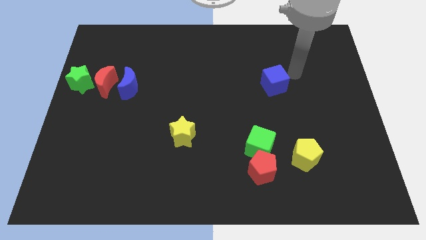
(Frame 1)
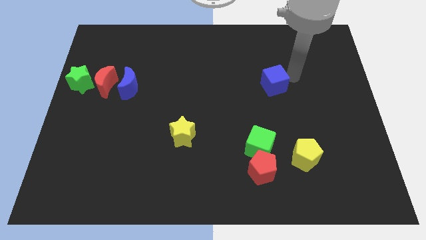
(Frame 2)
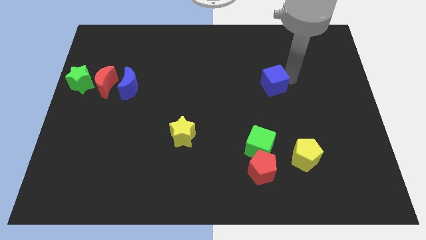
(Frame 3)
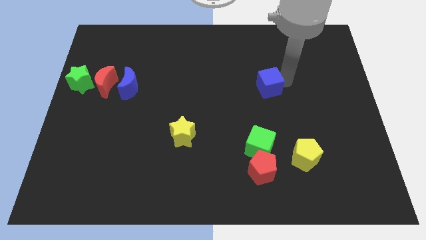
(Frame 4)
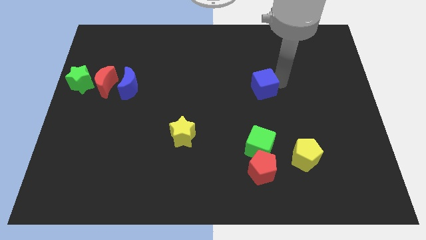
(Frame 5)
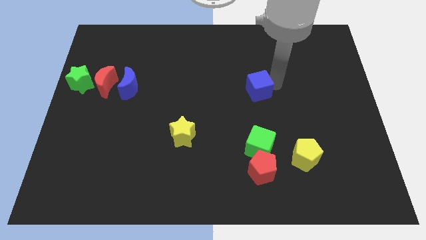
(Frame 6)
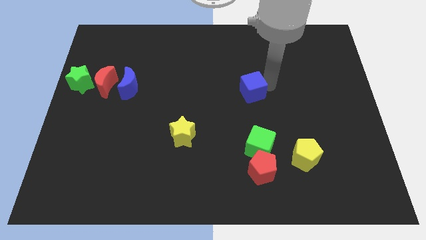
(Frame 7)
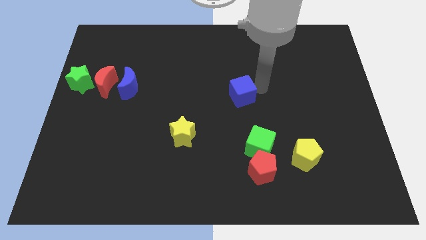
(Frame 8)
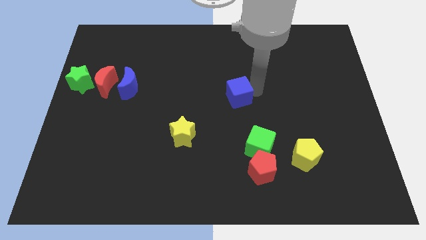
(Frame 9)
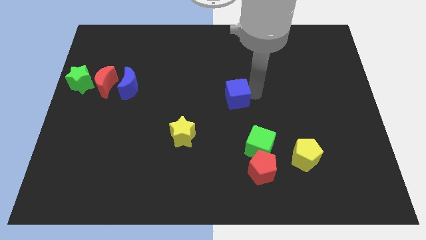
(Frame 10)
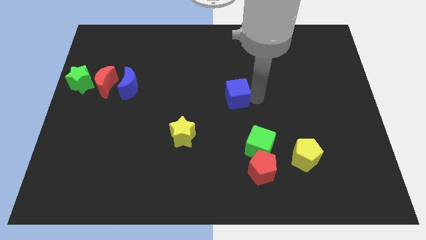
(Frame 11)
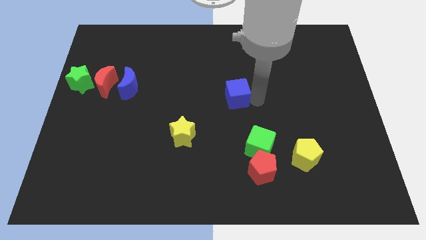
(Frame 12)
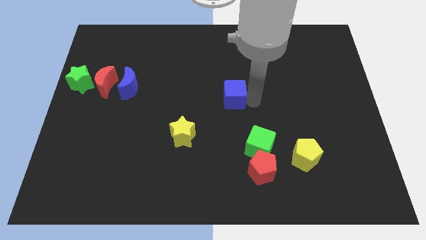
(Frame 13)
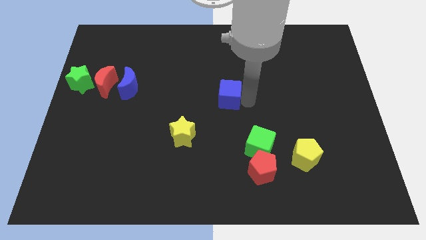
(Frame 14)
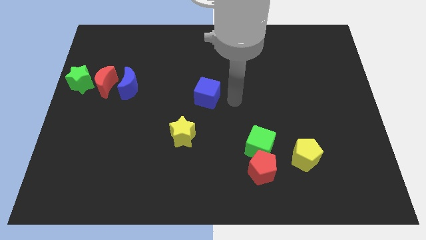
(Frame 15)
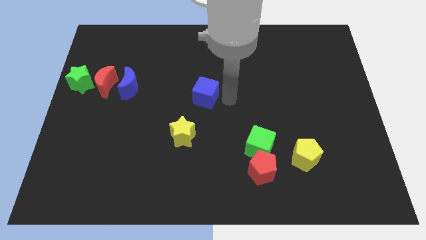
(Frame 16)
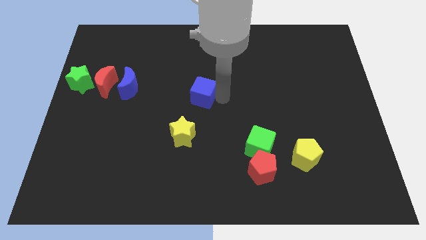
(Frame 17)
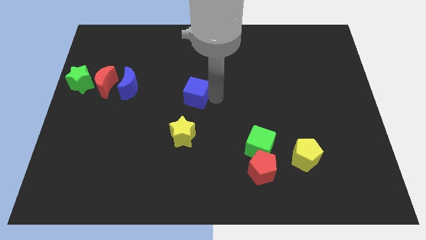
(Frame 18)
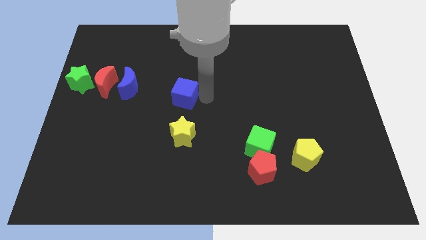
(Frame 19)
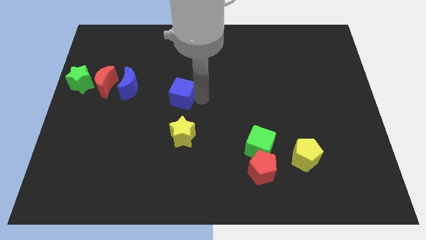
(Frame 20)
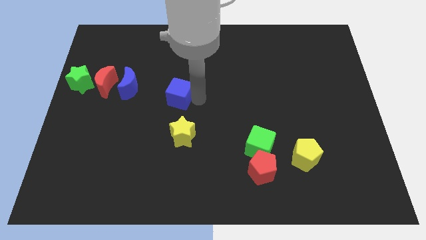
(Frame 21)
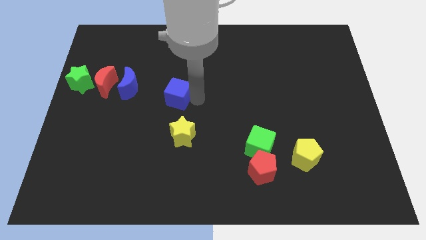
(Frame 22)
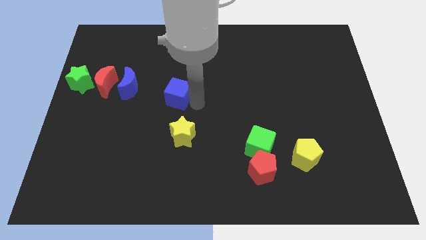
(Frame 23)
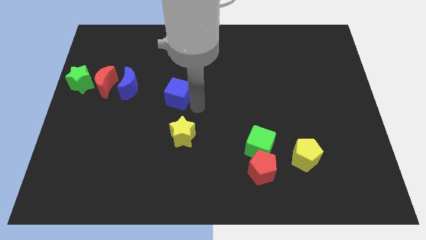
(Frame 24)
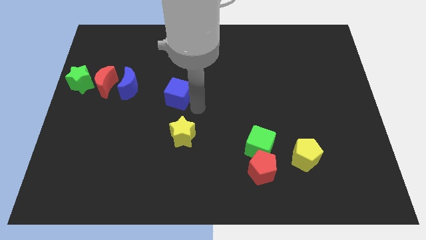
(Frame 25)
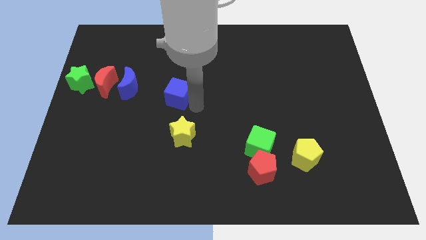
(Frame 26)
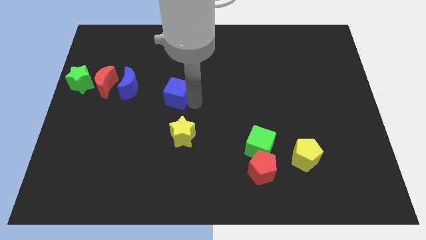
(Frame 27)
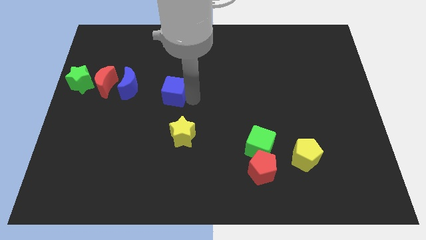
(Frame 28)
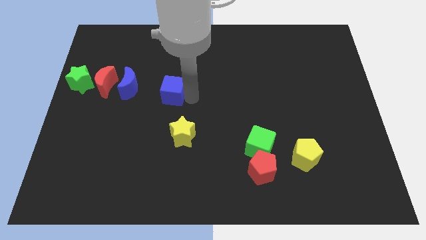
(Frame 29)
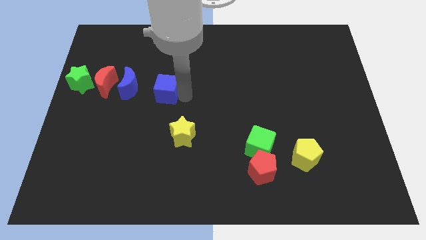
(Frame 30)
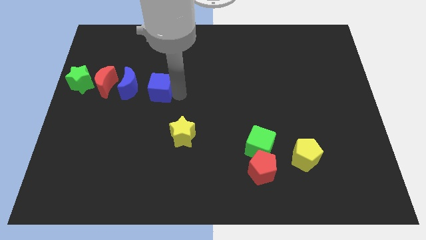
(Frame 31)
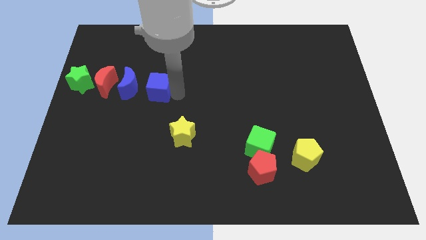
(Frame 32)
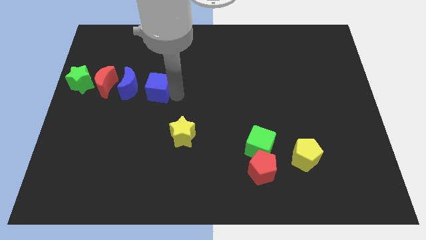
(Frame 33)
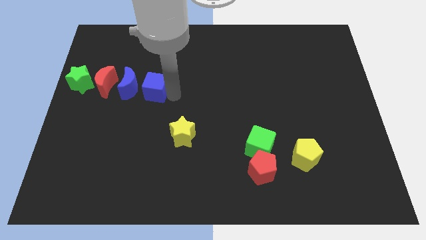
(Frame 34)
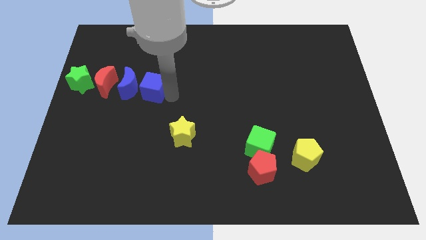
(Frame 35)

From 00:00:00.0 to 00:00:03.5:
place blue cube on the right side of the blue crescent

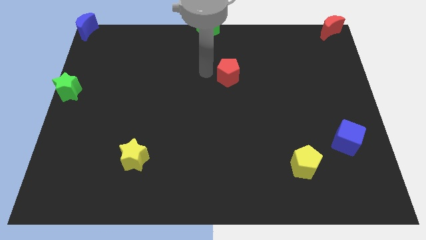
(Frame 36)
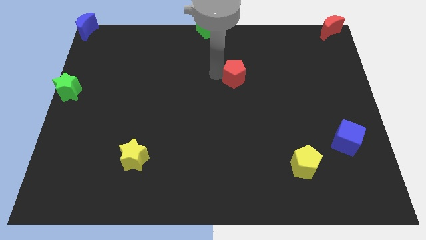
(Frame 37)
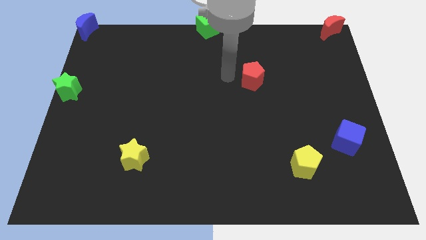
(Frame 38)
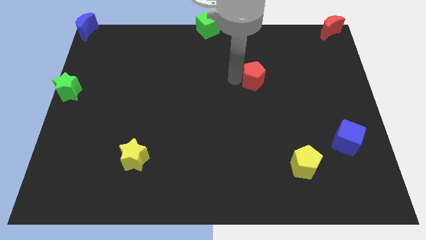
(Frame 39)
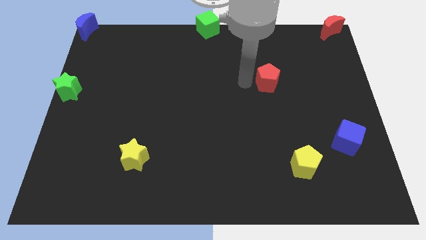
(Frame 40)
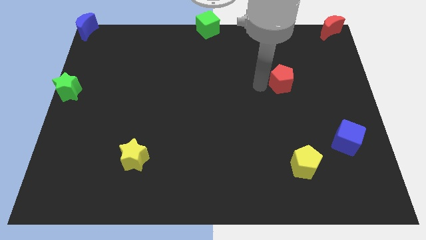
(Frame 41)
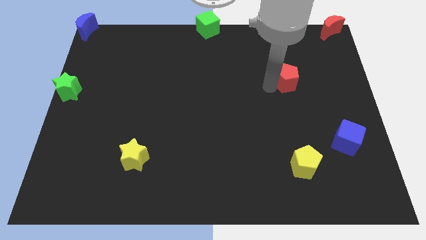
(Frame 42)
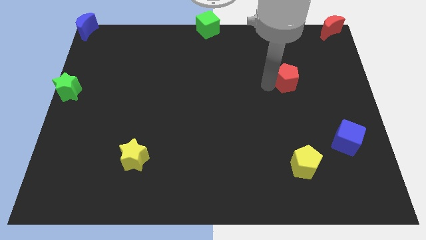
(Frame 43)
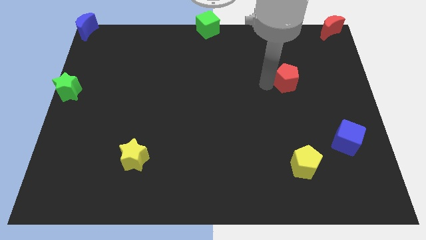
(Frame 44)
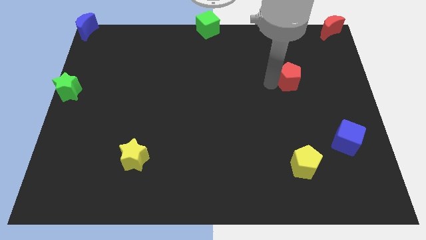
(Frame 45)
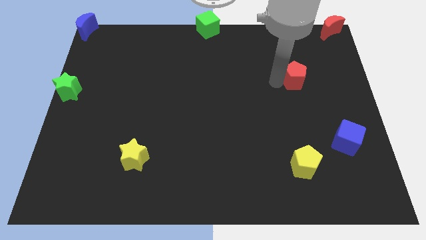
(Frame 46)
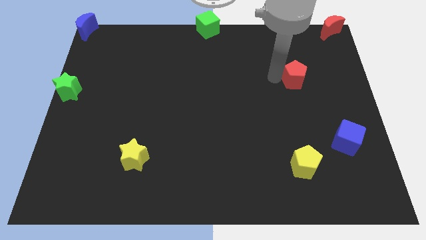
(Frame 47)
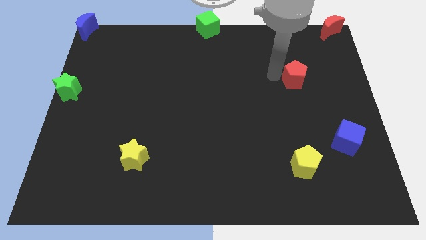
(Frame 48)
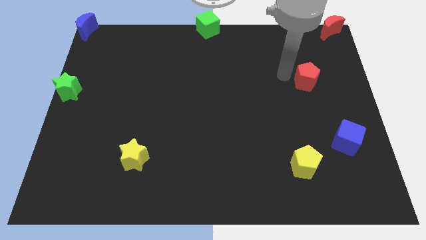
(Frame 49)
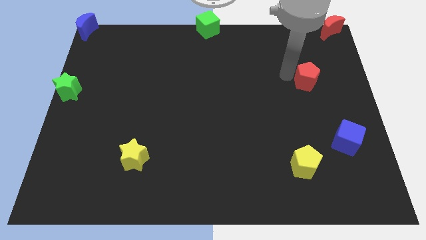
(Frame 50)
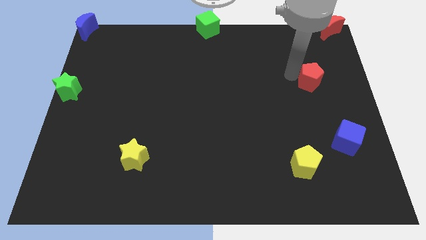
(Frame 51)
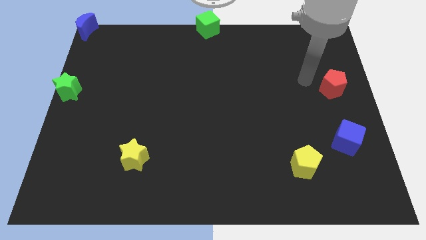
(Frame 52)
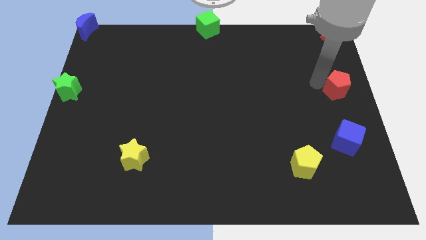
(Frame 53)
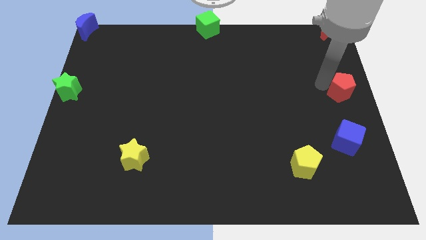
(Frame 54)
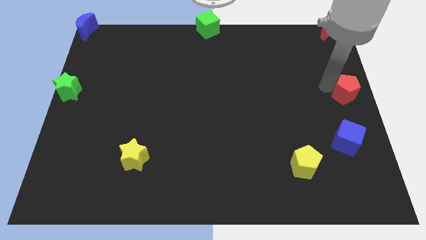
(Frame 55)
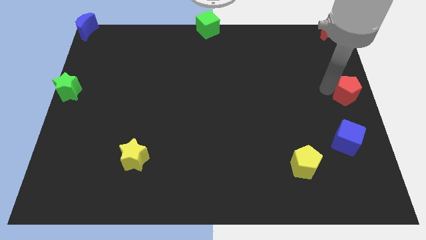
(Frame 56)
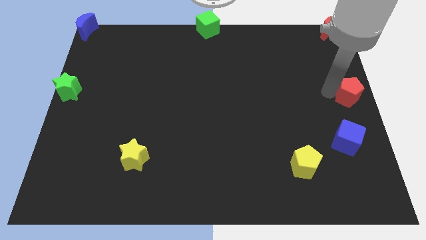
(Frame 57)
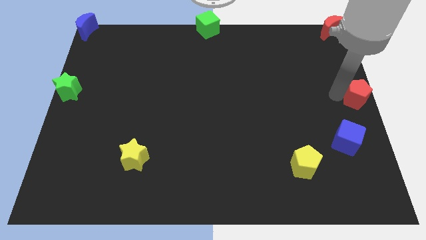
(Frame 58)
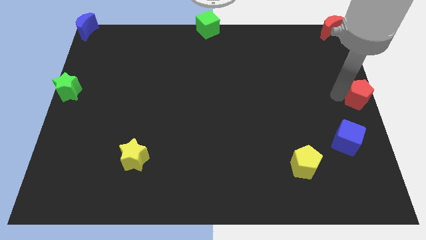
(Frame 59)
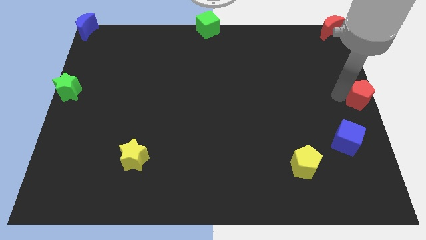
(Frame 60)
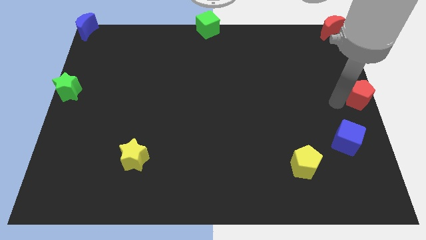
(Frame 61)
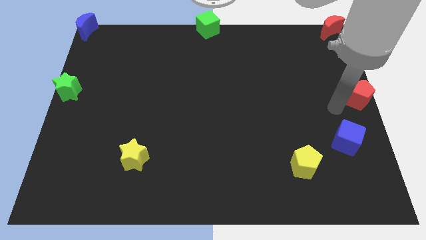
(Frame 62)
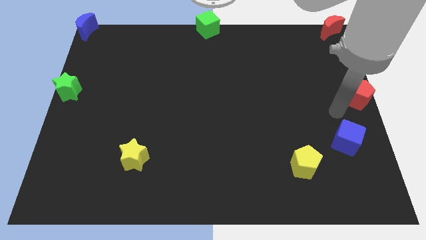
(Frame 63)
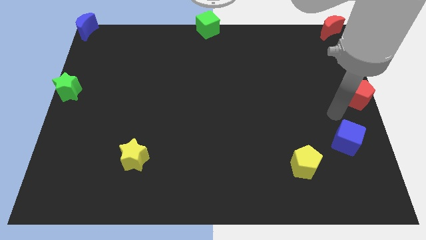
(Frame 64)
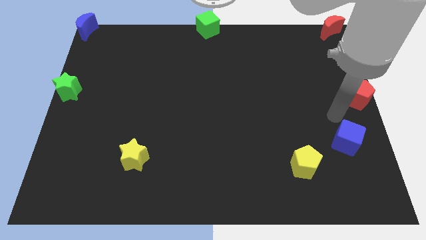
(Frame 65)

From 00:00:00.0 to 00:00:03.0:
move the red pentagon to the right center of the board

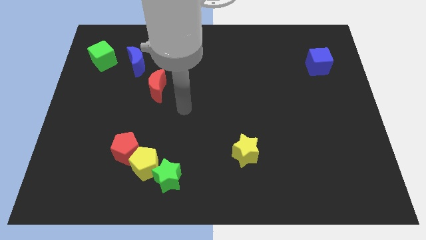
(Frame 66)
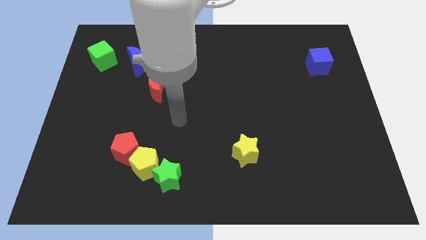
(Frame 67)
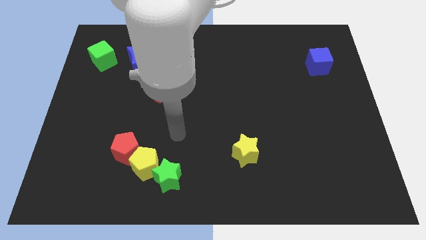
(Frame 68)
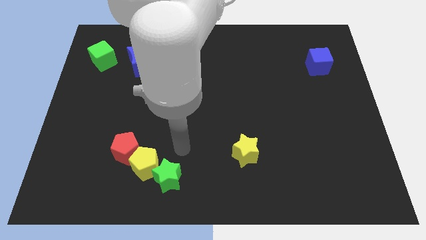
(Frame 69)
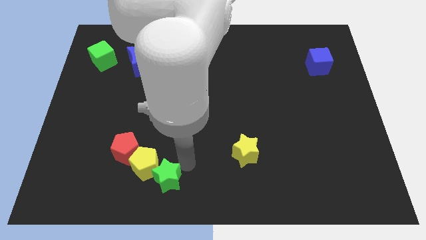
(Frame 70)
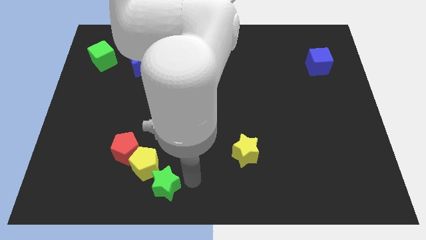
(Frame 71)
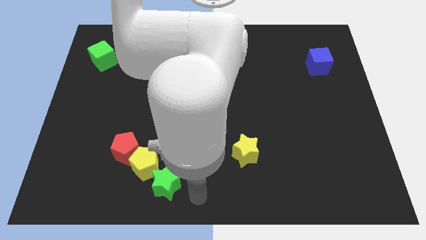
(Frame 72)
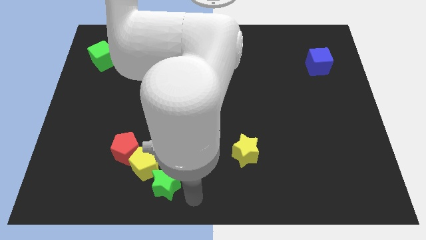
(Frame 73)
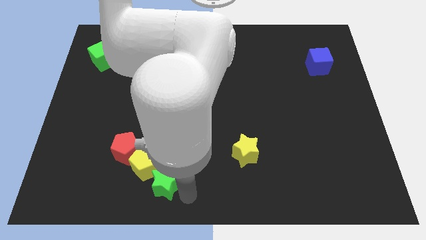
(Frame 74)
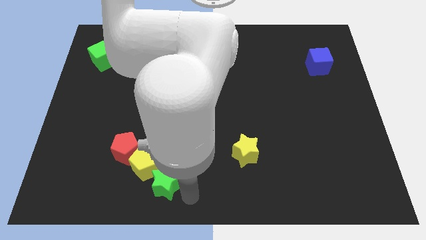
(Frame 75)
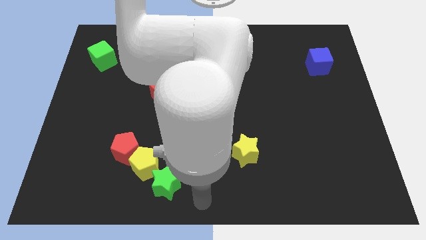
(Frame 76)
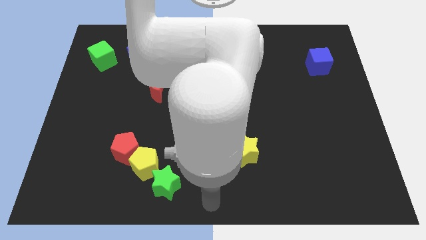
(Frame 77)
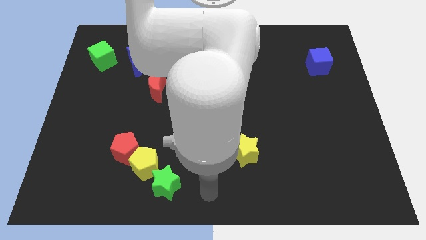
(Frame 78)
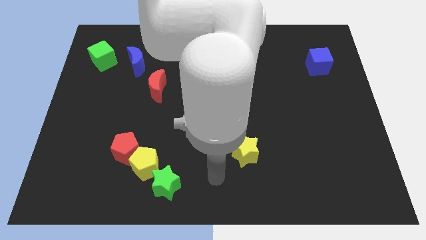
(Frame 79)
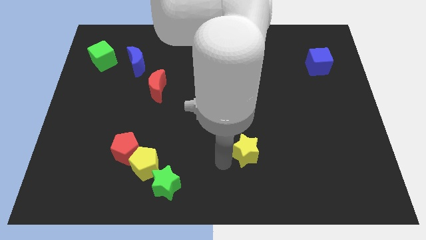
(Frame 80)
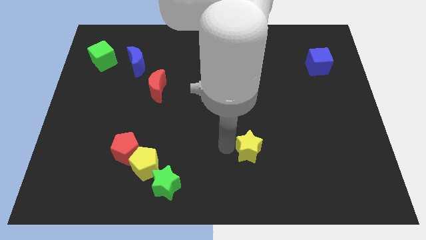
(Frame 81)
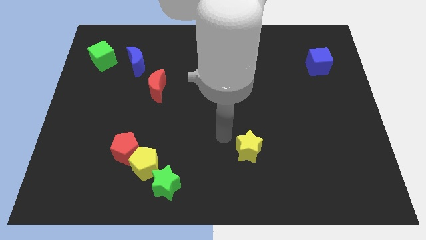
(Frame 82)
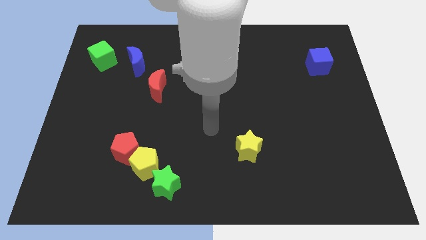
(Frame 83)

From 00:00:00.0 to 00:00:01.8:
place your arm at the left side of the yellow star

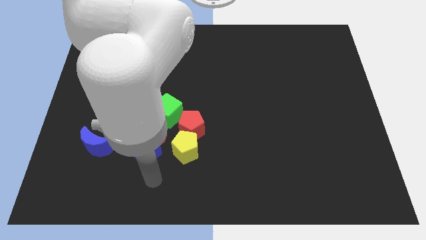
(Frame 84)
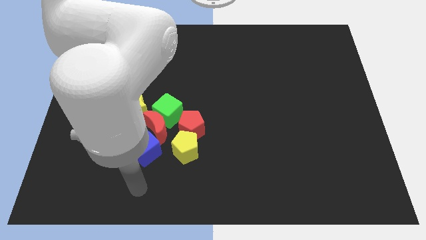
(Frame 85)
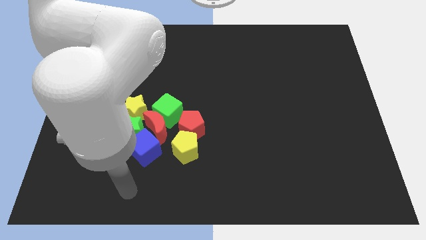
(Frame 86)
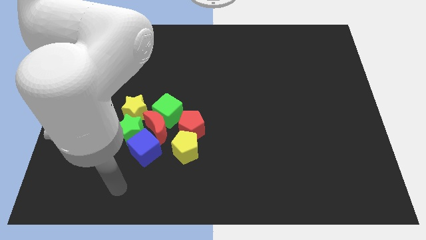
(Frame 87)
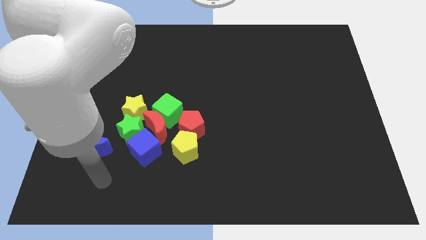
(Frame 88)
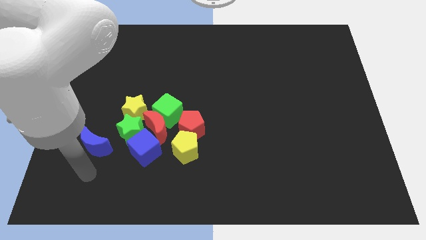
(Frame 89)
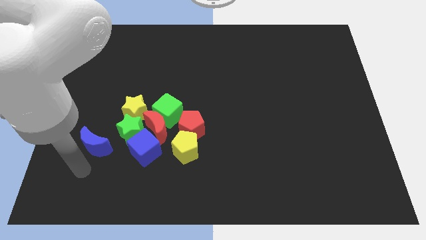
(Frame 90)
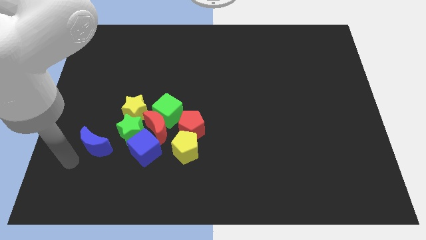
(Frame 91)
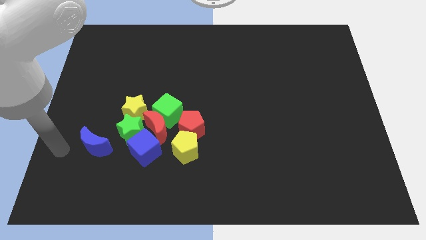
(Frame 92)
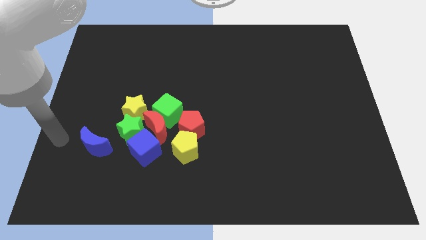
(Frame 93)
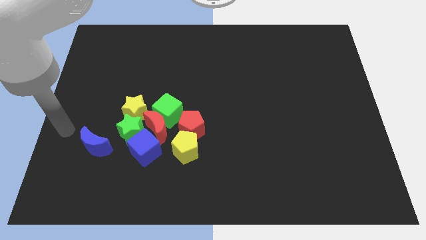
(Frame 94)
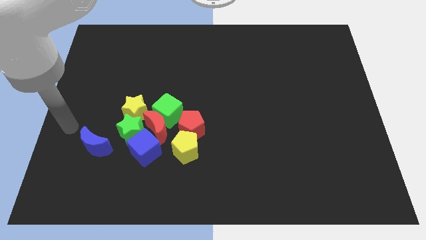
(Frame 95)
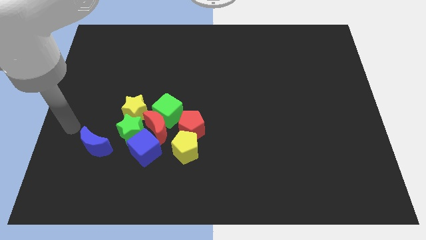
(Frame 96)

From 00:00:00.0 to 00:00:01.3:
point the arm to the left of the blue crescent
